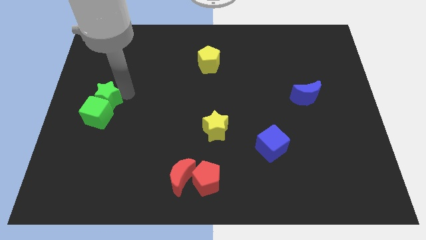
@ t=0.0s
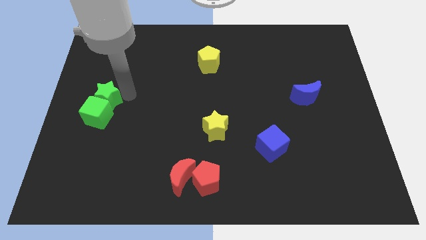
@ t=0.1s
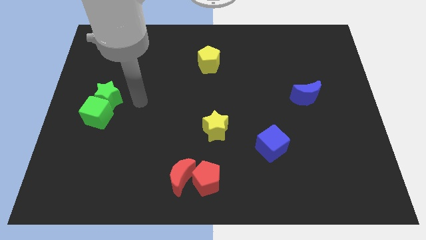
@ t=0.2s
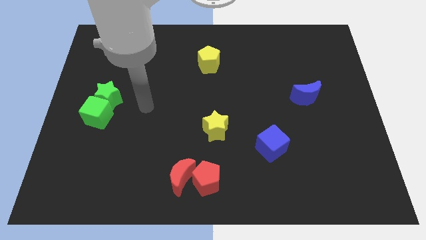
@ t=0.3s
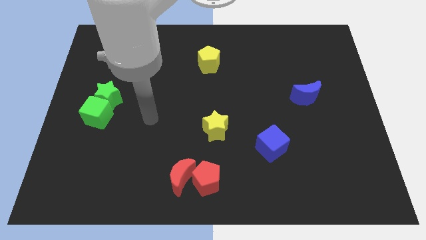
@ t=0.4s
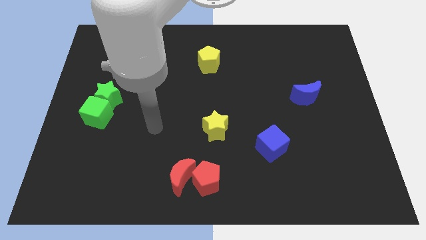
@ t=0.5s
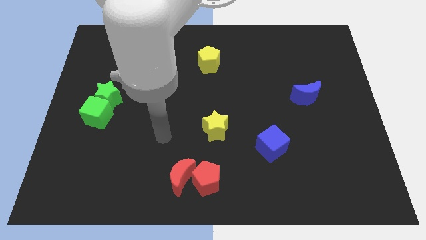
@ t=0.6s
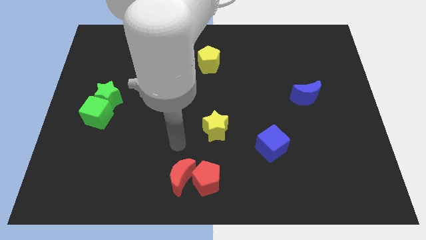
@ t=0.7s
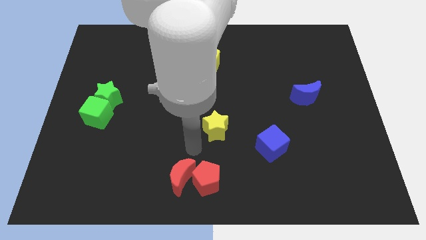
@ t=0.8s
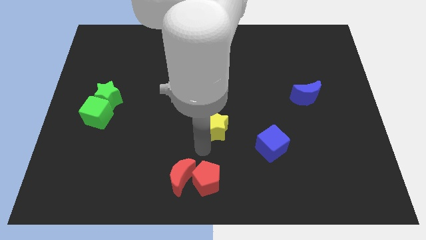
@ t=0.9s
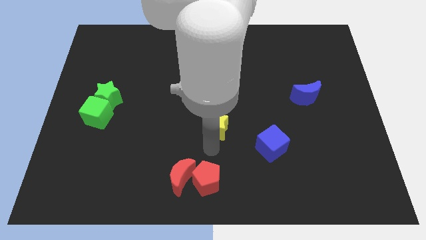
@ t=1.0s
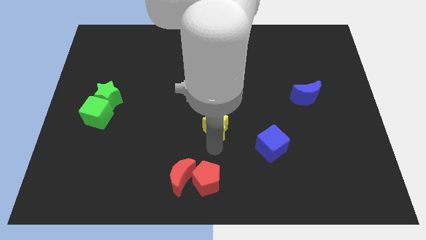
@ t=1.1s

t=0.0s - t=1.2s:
move your arm away fron the green star

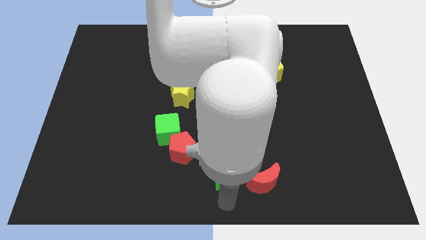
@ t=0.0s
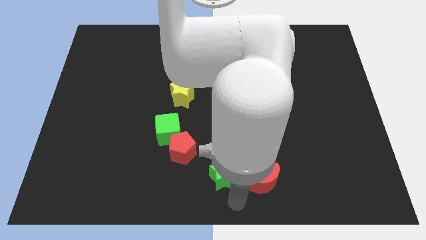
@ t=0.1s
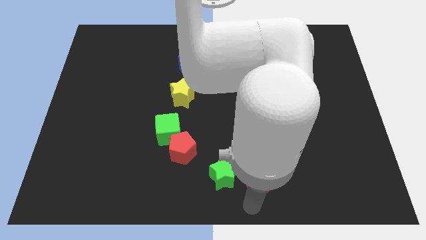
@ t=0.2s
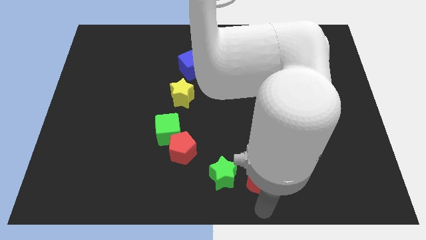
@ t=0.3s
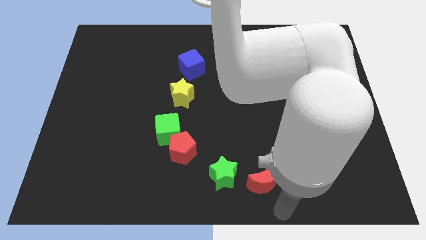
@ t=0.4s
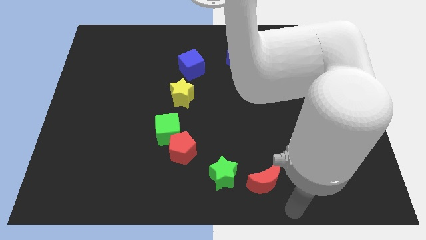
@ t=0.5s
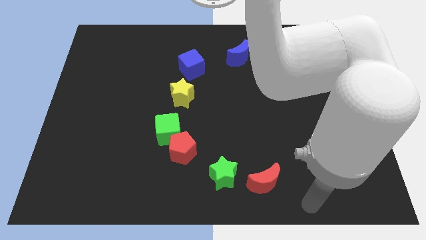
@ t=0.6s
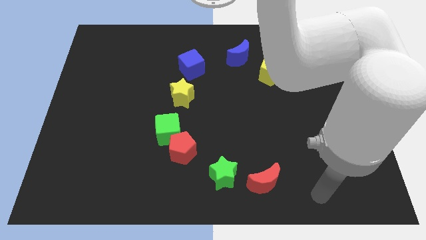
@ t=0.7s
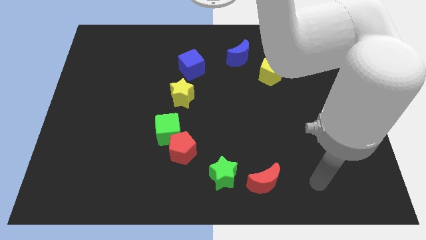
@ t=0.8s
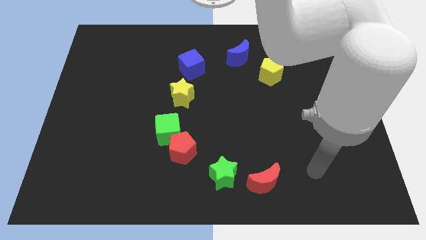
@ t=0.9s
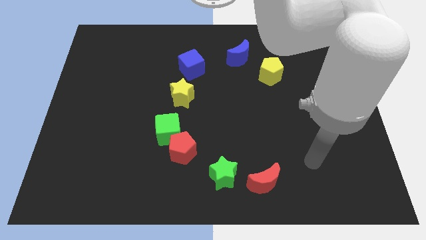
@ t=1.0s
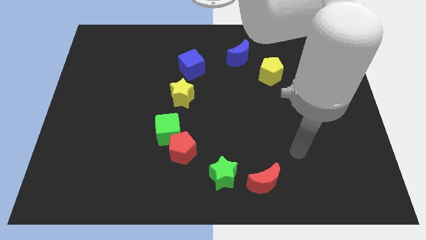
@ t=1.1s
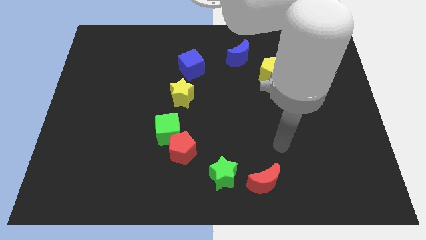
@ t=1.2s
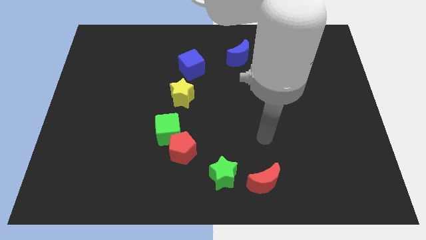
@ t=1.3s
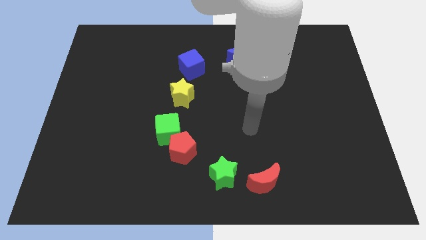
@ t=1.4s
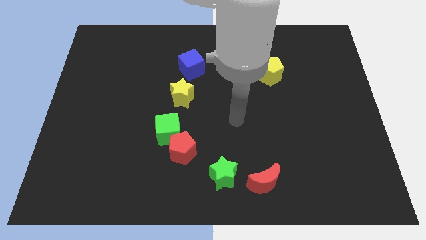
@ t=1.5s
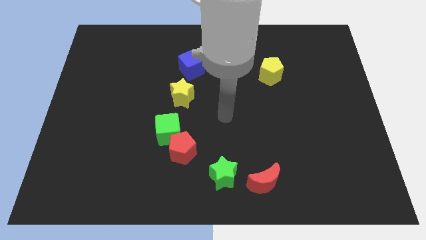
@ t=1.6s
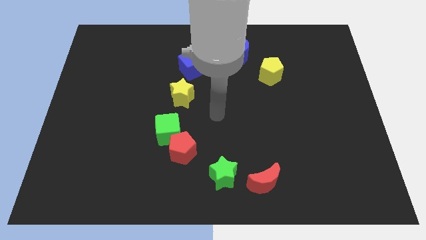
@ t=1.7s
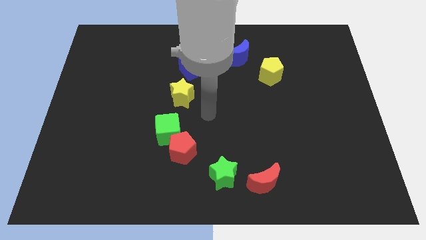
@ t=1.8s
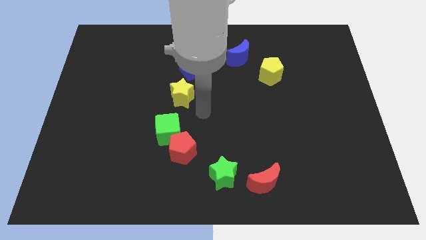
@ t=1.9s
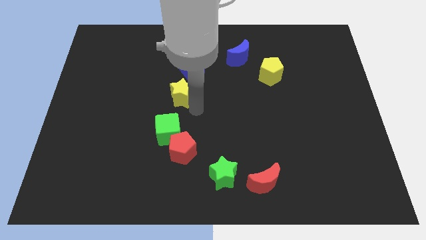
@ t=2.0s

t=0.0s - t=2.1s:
place the arm right to the yellow star

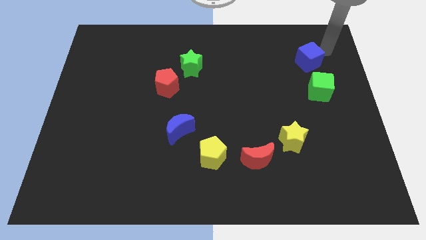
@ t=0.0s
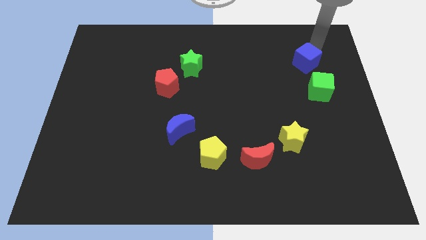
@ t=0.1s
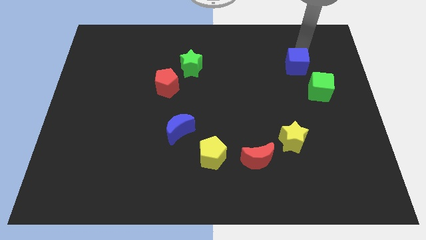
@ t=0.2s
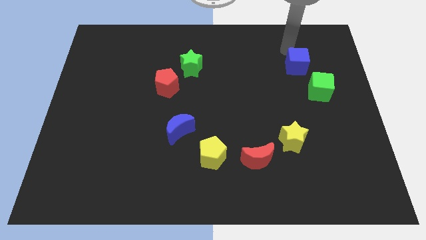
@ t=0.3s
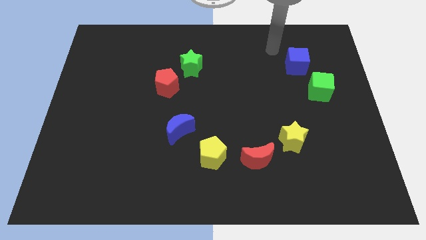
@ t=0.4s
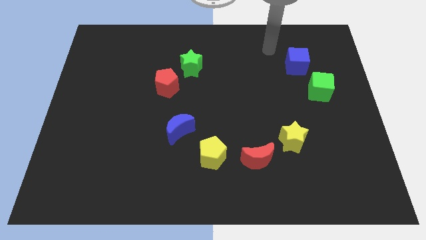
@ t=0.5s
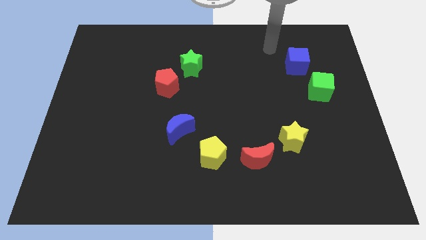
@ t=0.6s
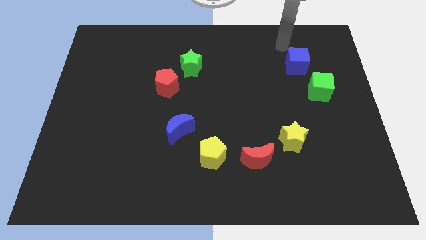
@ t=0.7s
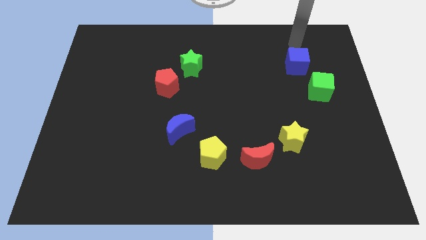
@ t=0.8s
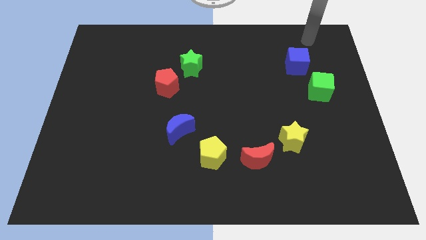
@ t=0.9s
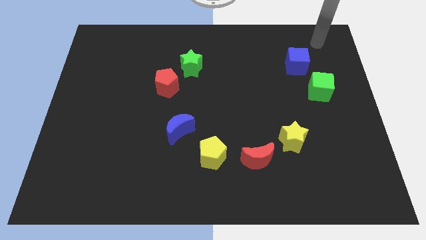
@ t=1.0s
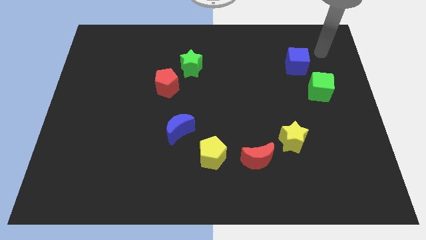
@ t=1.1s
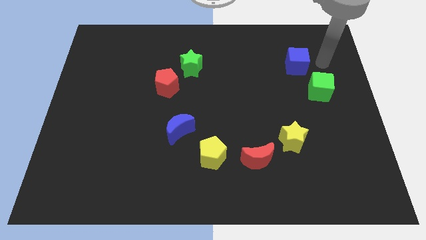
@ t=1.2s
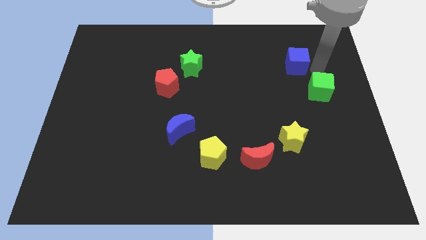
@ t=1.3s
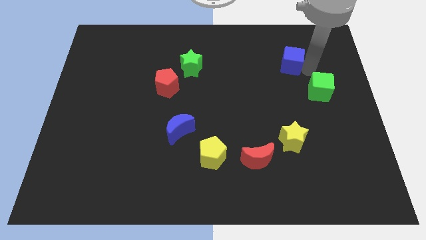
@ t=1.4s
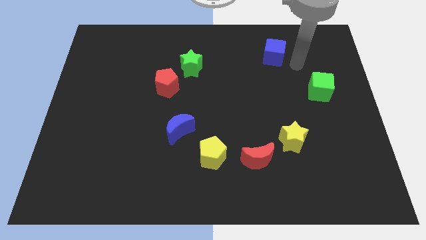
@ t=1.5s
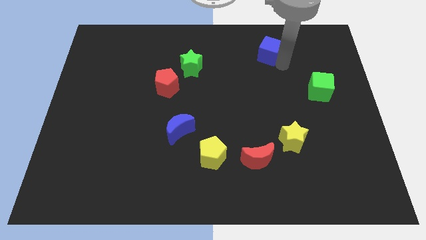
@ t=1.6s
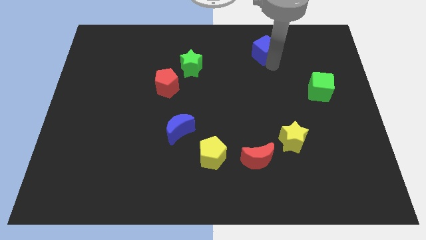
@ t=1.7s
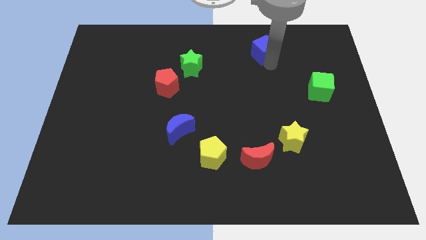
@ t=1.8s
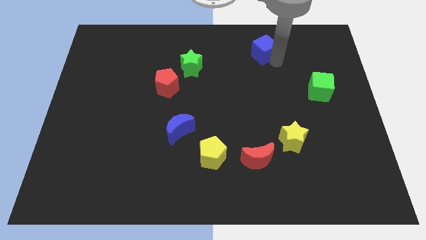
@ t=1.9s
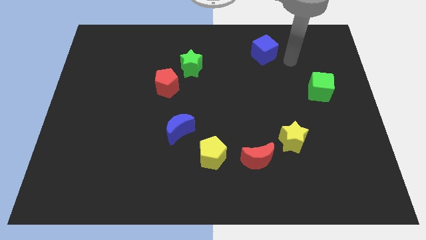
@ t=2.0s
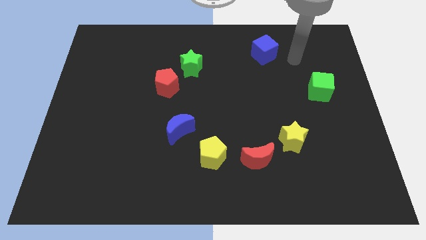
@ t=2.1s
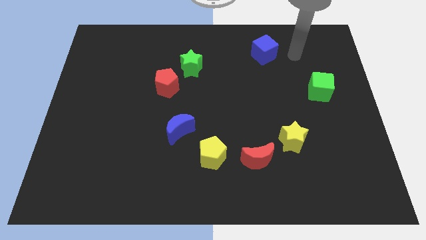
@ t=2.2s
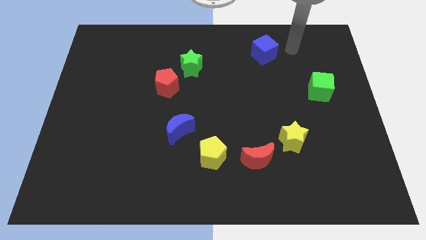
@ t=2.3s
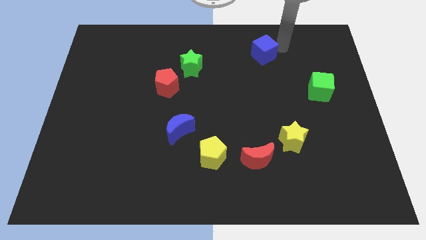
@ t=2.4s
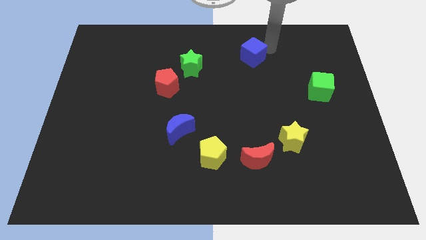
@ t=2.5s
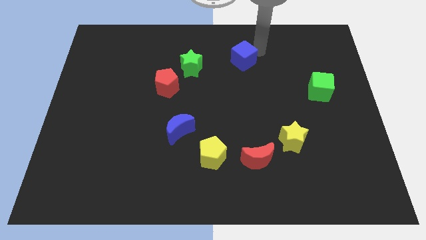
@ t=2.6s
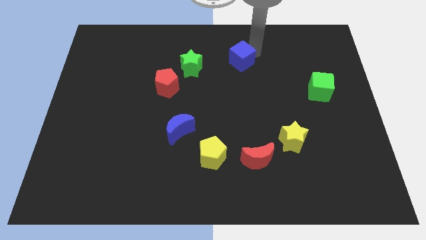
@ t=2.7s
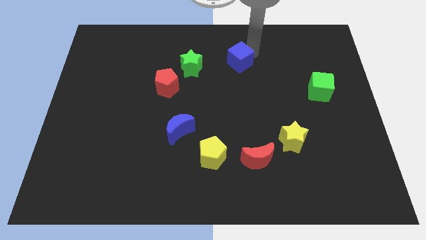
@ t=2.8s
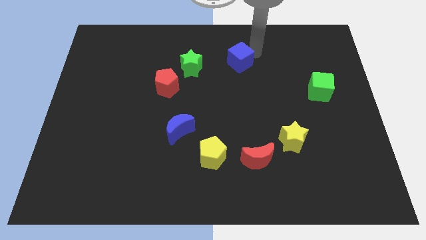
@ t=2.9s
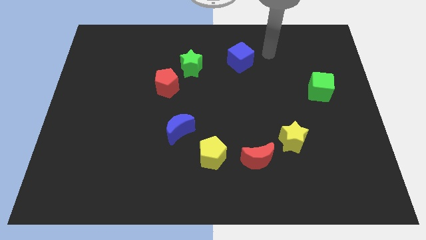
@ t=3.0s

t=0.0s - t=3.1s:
push blue cube to the right of green star

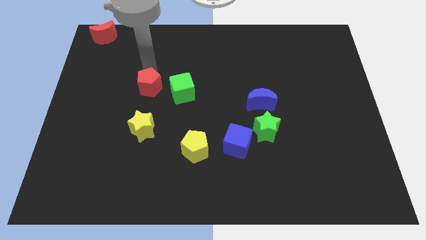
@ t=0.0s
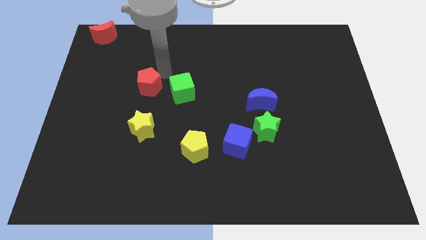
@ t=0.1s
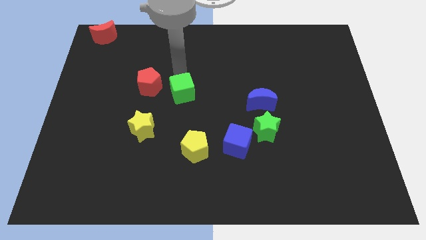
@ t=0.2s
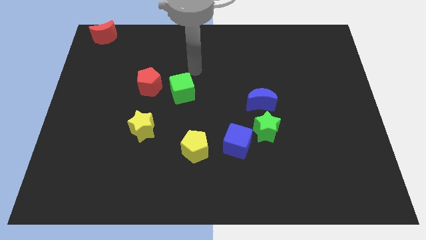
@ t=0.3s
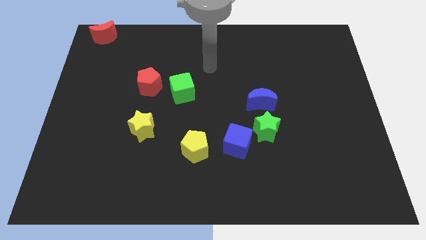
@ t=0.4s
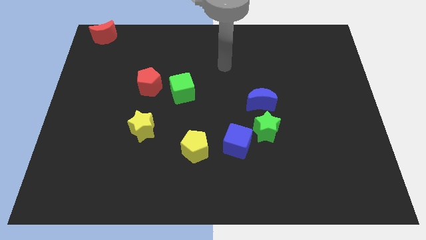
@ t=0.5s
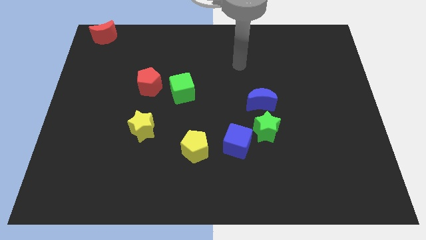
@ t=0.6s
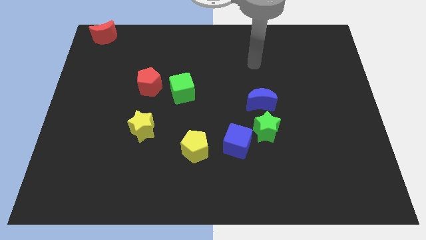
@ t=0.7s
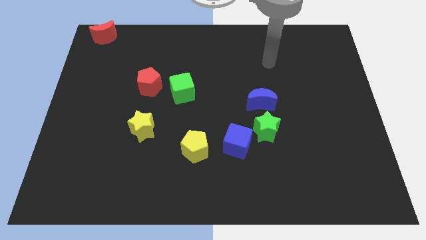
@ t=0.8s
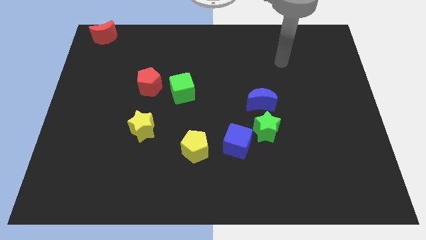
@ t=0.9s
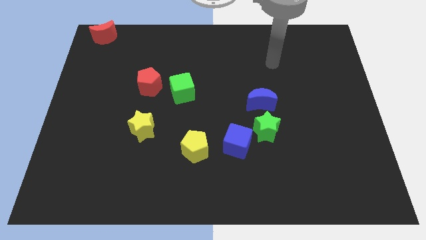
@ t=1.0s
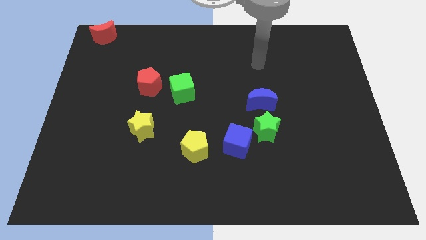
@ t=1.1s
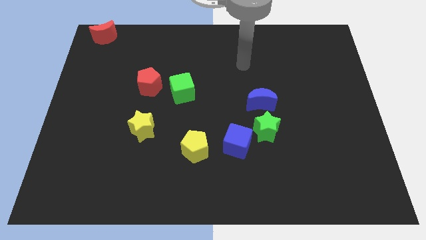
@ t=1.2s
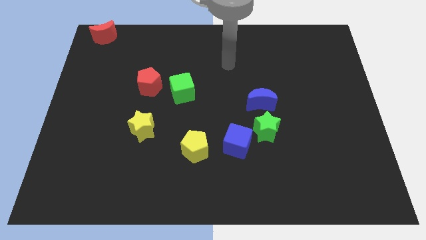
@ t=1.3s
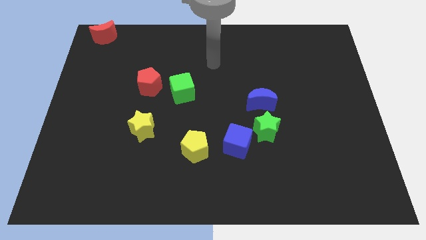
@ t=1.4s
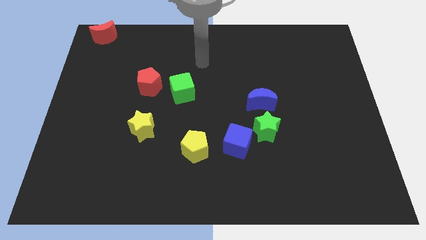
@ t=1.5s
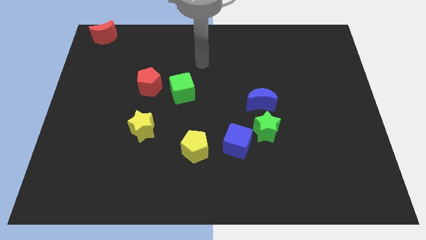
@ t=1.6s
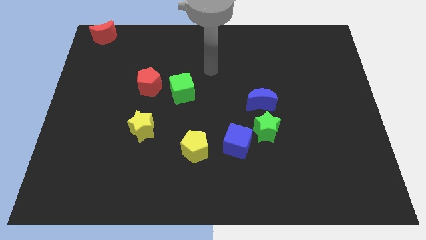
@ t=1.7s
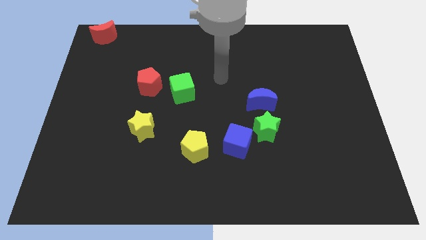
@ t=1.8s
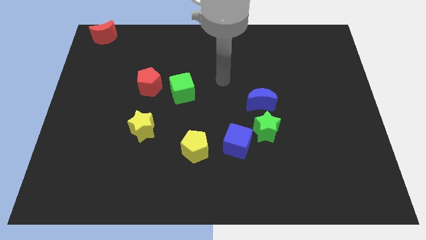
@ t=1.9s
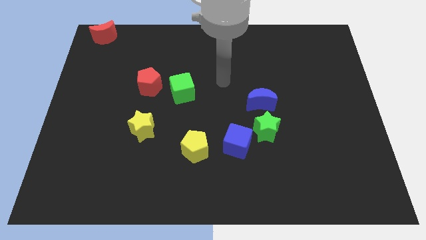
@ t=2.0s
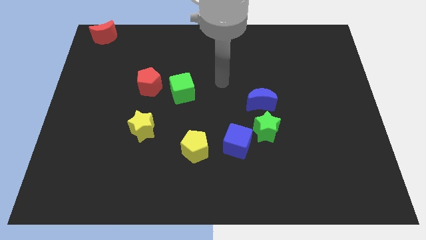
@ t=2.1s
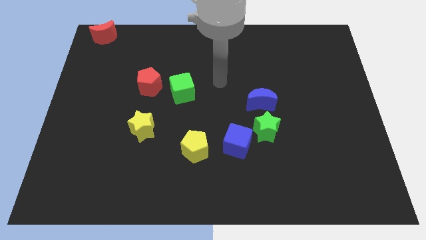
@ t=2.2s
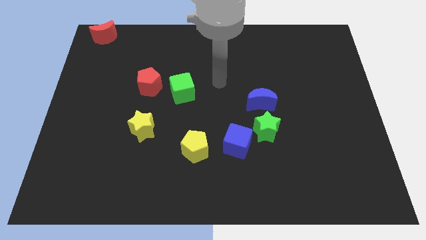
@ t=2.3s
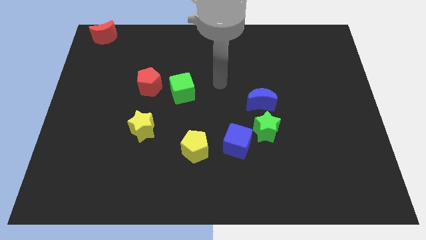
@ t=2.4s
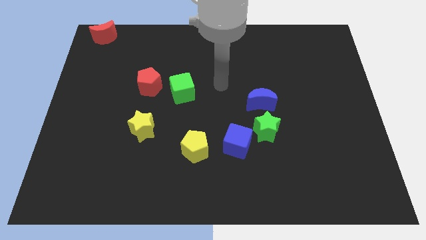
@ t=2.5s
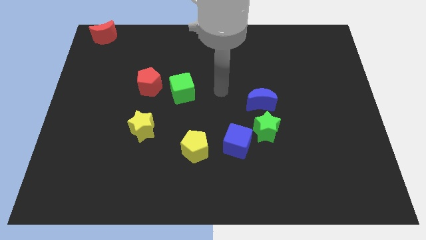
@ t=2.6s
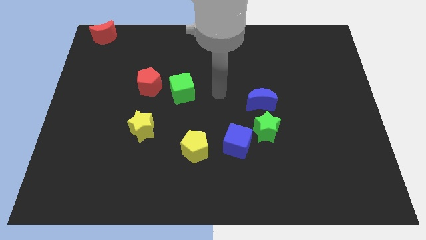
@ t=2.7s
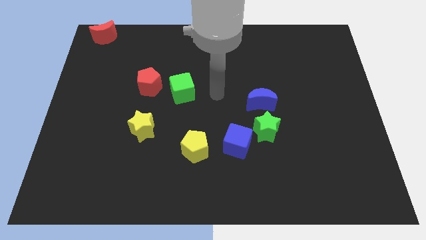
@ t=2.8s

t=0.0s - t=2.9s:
put arm at center
